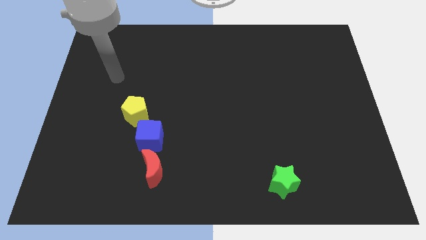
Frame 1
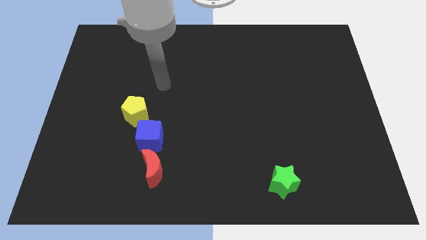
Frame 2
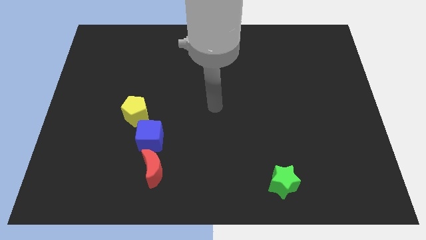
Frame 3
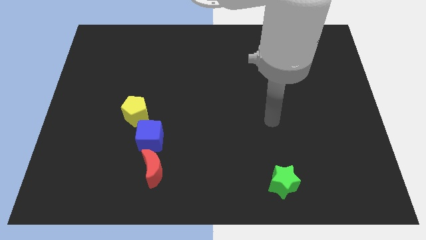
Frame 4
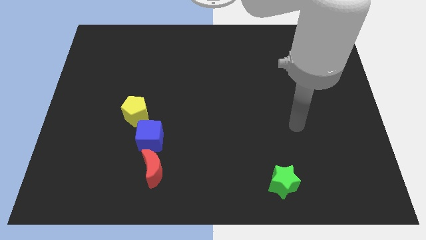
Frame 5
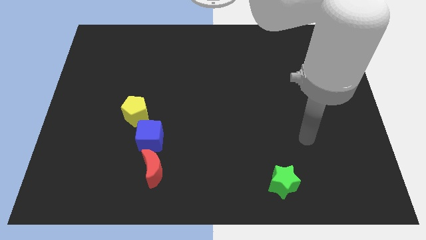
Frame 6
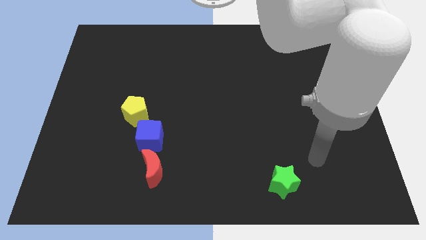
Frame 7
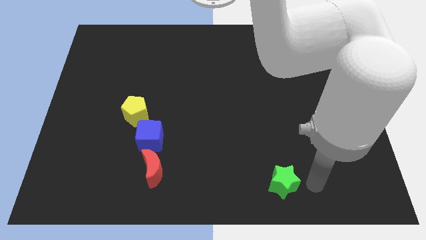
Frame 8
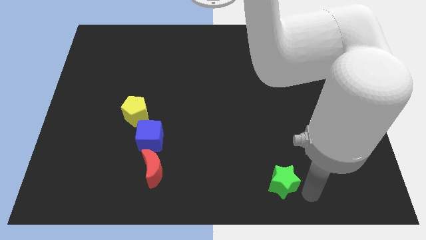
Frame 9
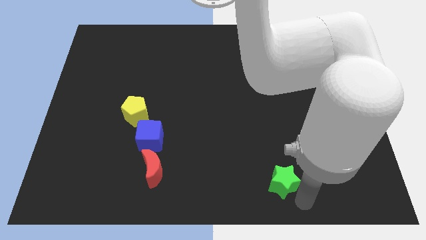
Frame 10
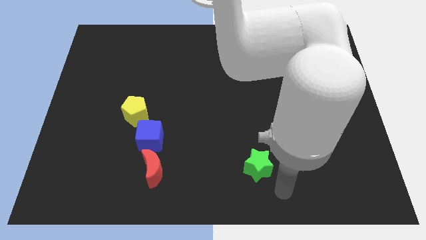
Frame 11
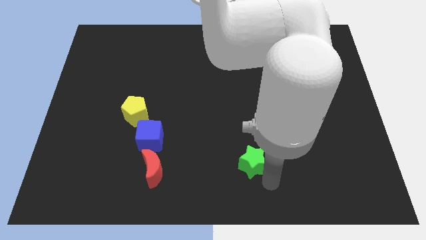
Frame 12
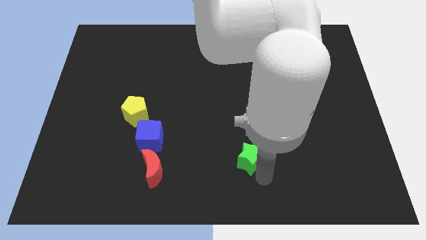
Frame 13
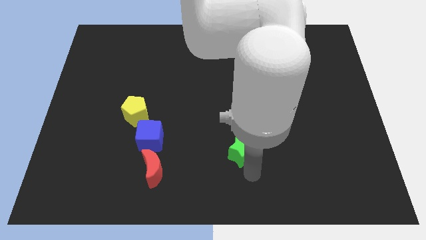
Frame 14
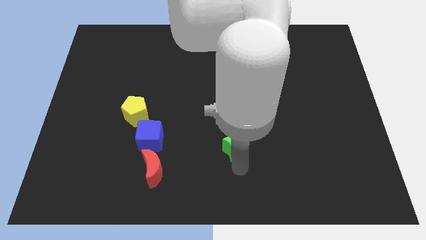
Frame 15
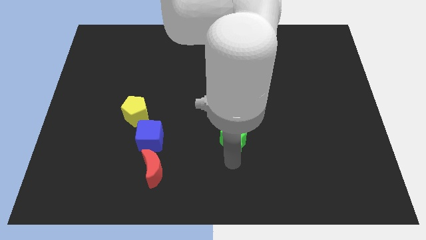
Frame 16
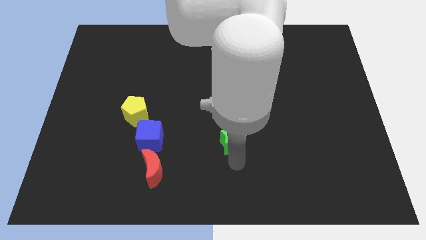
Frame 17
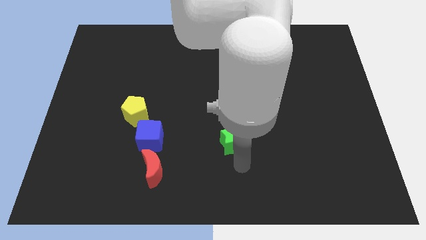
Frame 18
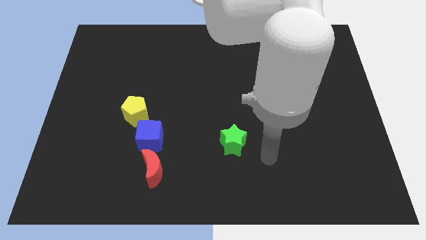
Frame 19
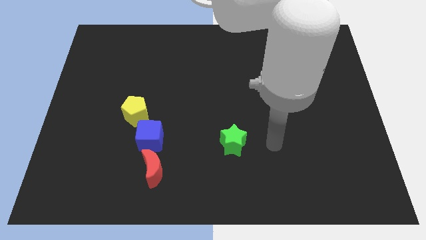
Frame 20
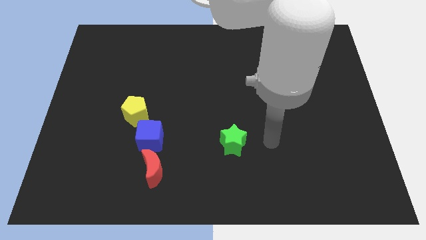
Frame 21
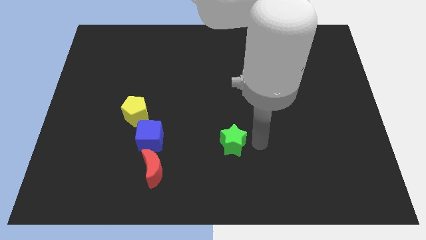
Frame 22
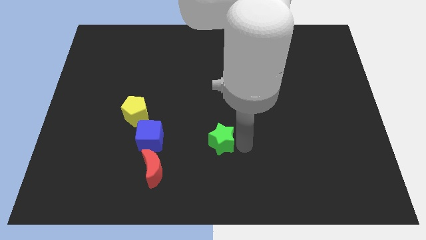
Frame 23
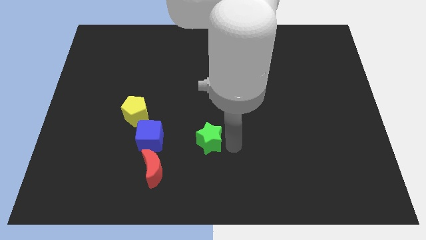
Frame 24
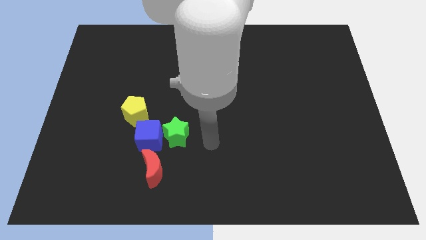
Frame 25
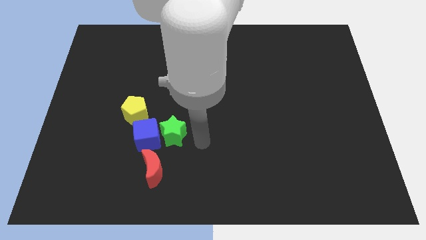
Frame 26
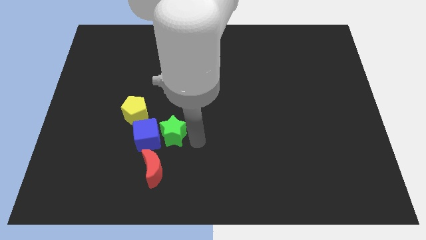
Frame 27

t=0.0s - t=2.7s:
slide the green star next to the cube

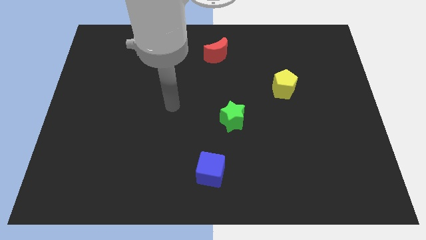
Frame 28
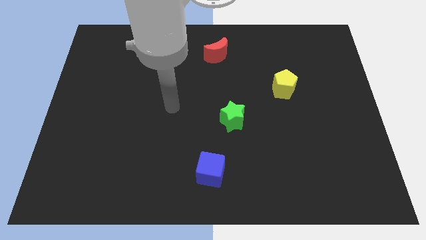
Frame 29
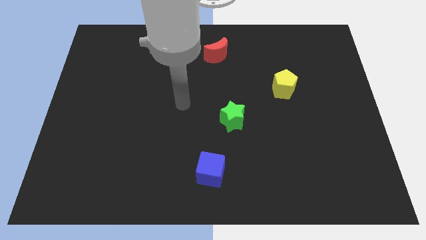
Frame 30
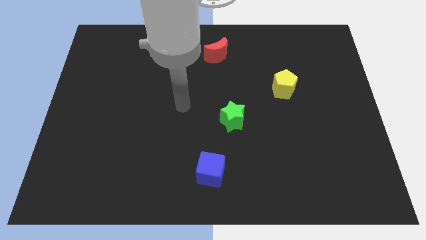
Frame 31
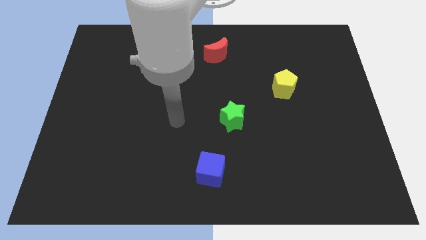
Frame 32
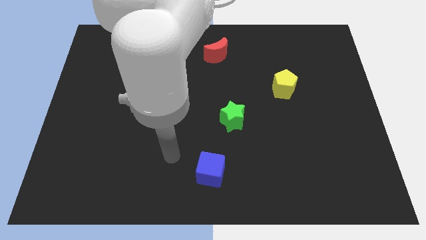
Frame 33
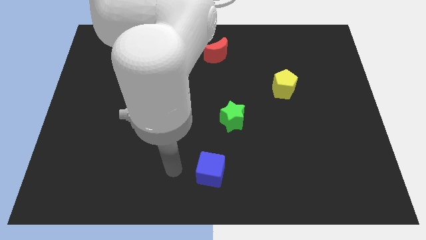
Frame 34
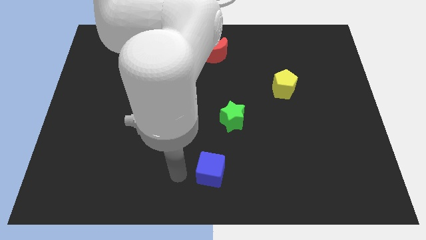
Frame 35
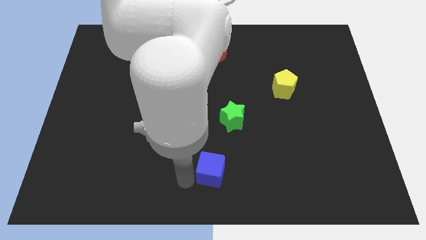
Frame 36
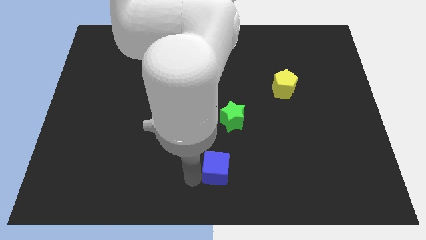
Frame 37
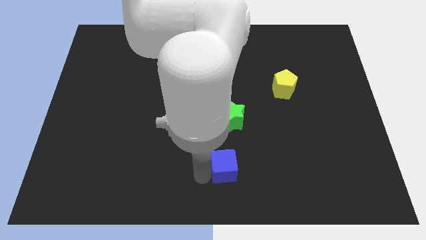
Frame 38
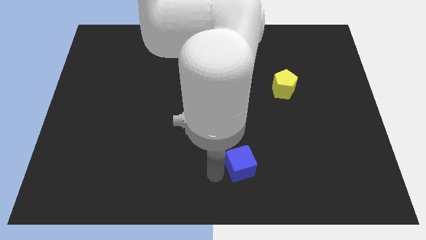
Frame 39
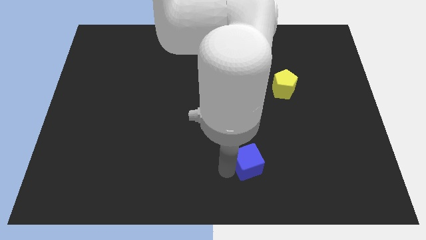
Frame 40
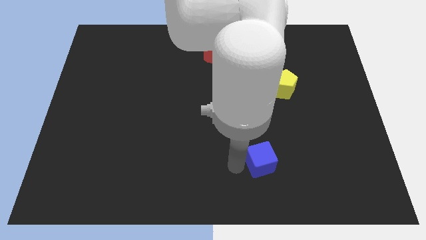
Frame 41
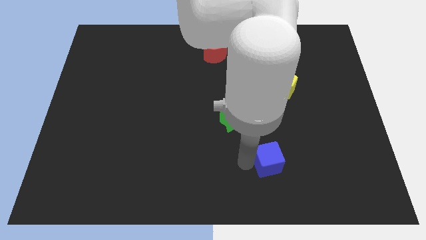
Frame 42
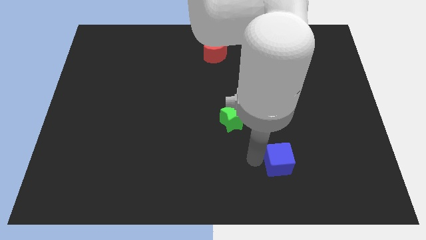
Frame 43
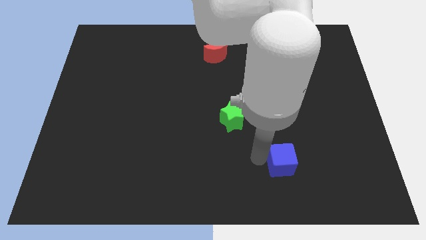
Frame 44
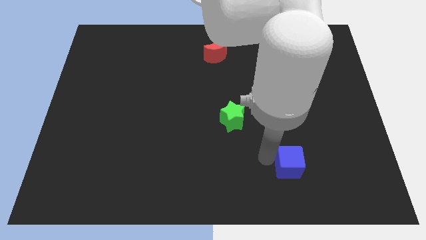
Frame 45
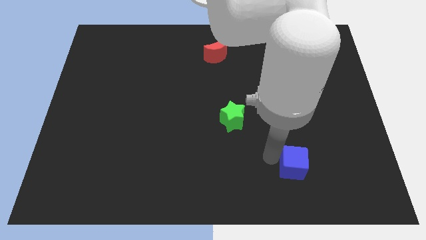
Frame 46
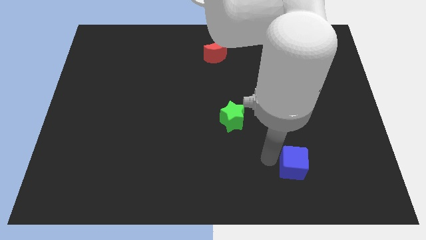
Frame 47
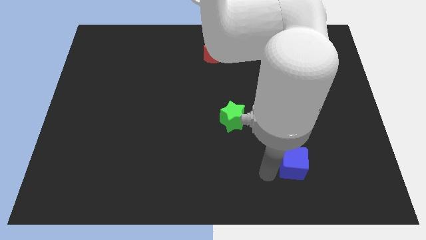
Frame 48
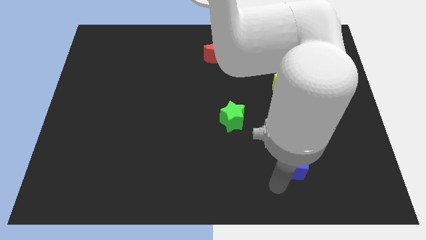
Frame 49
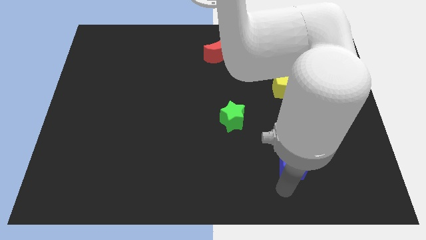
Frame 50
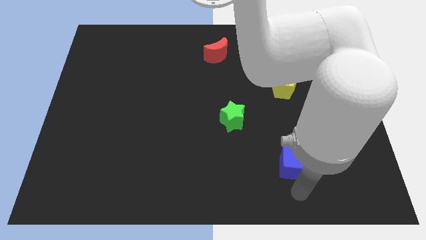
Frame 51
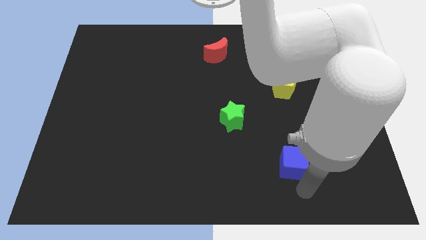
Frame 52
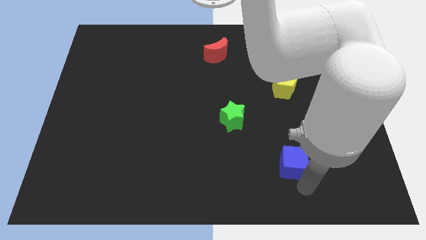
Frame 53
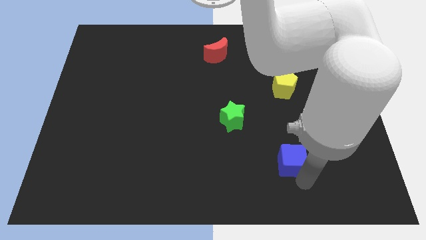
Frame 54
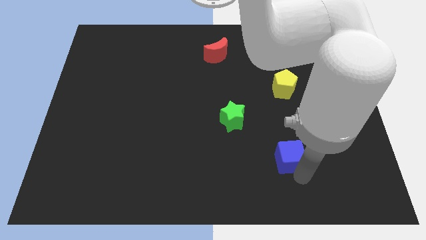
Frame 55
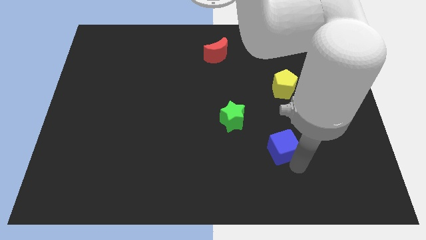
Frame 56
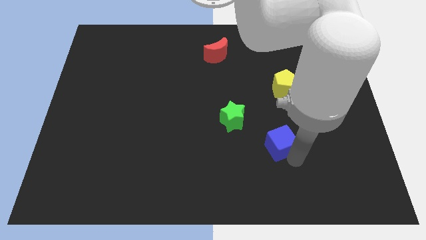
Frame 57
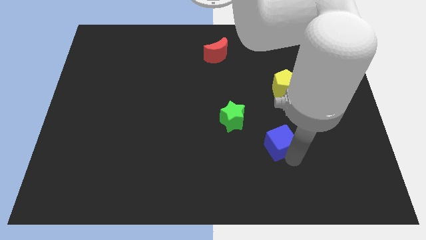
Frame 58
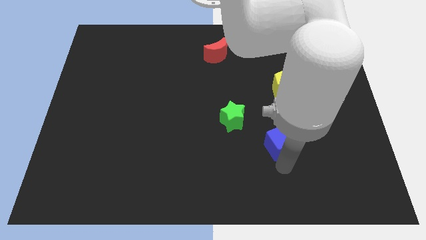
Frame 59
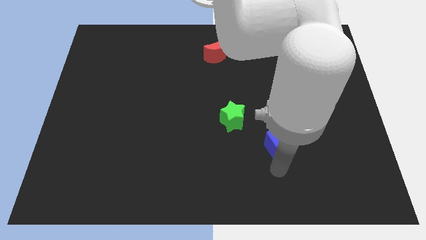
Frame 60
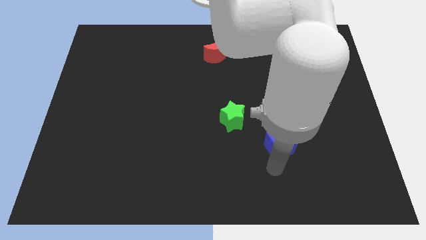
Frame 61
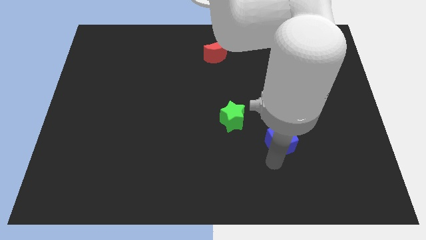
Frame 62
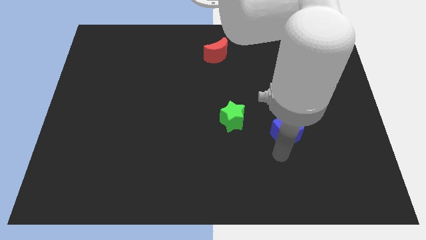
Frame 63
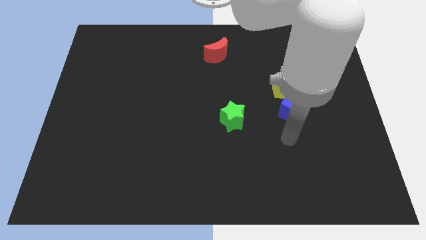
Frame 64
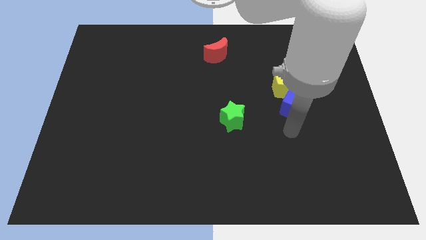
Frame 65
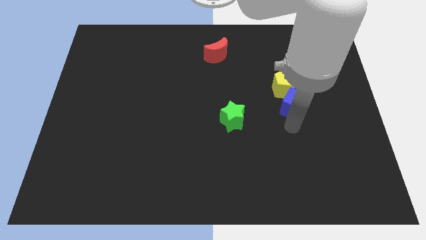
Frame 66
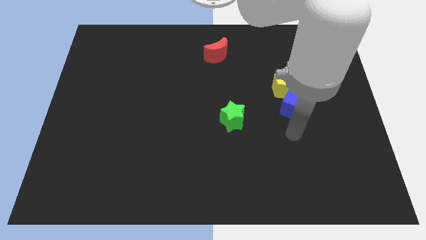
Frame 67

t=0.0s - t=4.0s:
put the blue cube to the pentagon

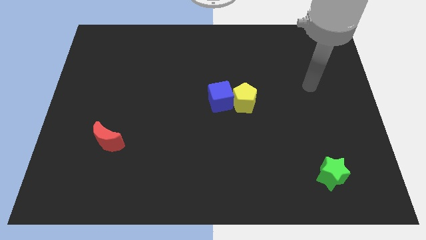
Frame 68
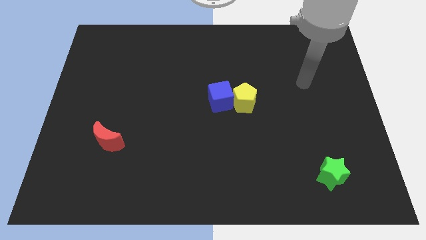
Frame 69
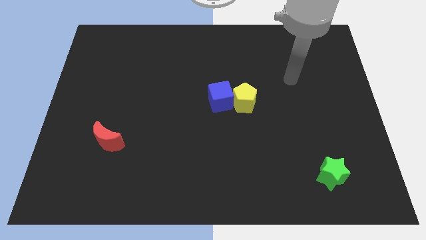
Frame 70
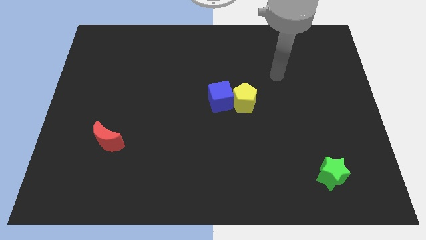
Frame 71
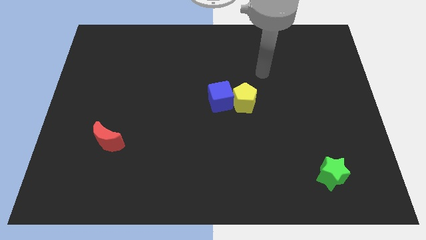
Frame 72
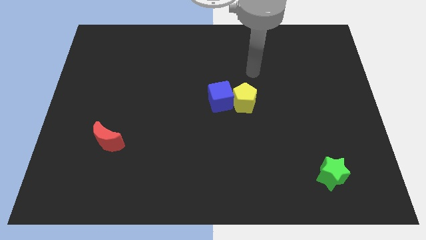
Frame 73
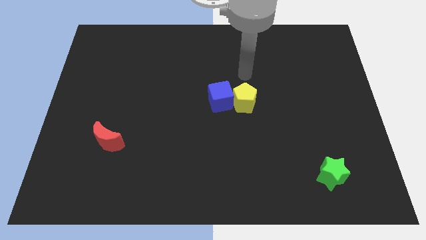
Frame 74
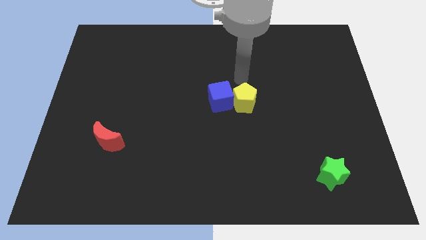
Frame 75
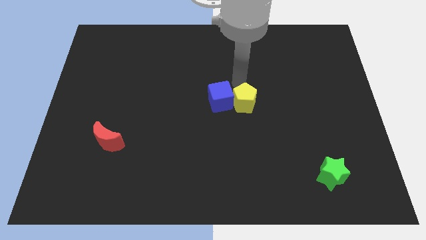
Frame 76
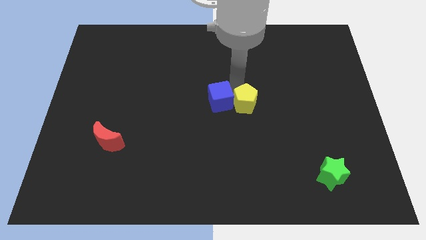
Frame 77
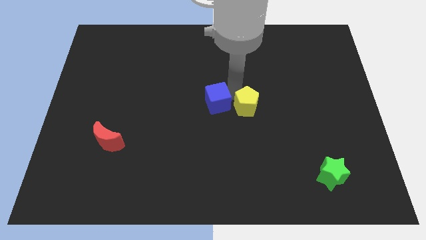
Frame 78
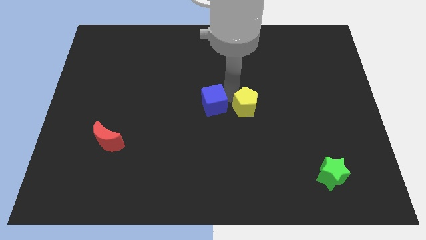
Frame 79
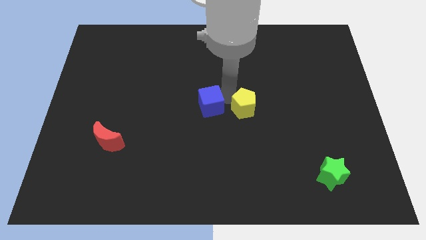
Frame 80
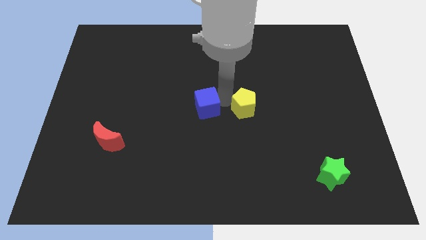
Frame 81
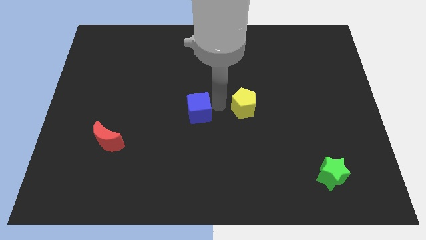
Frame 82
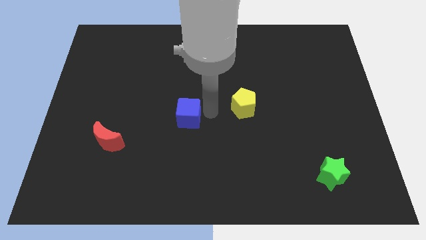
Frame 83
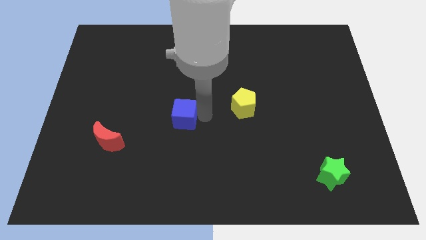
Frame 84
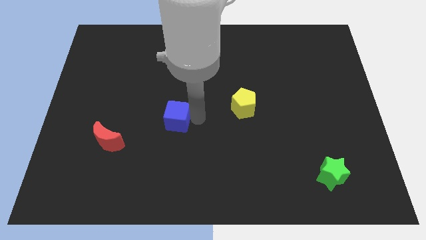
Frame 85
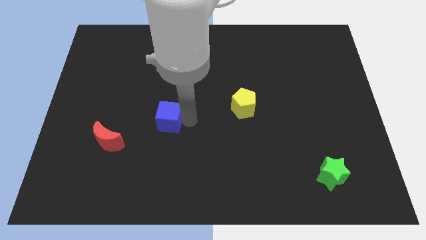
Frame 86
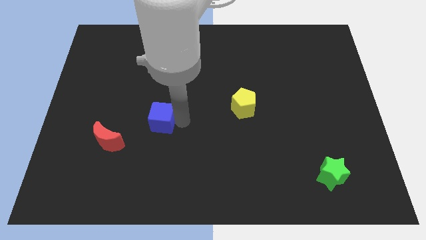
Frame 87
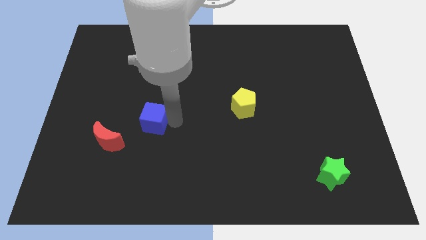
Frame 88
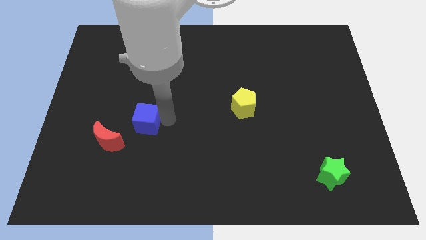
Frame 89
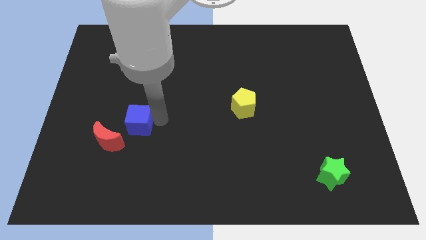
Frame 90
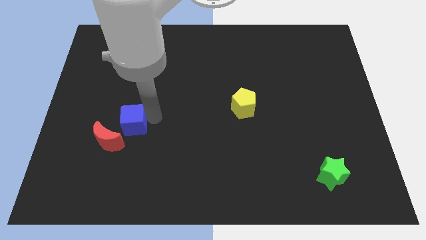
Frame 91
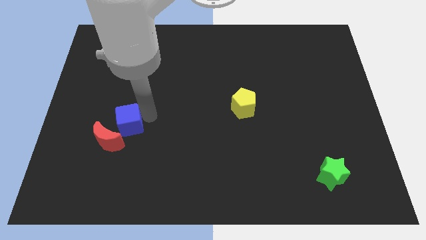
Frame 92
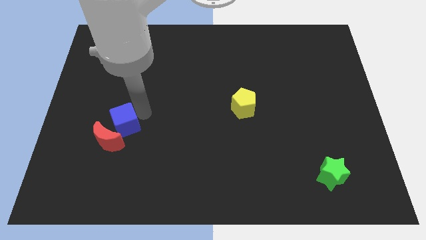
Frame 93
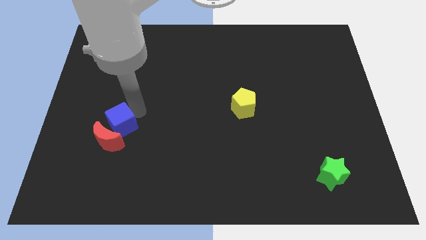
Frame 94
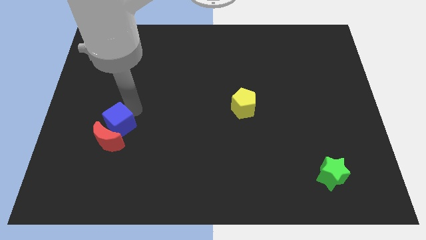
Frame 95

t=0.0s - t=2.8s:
move the cube close to the red block
